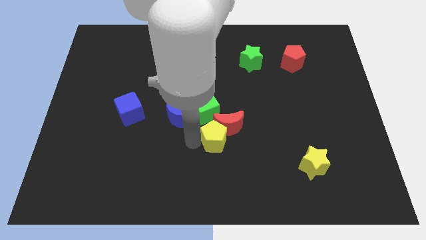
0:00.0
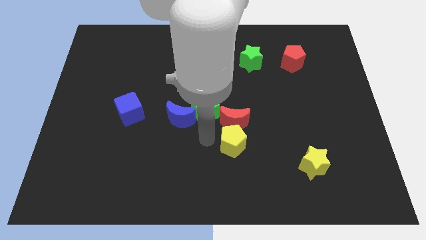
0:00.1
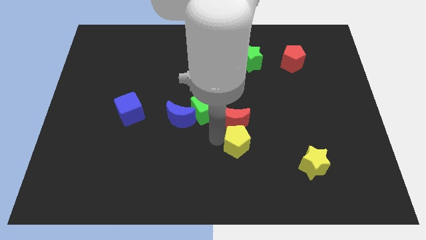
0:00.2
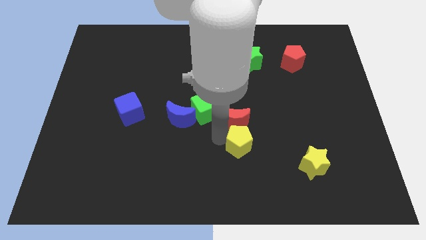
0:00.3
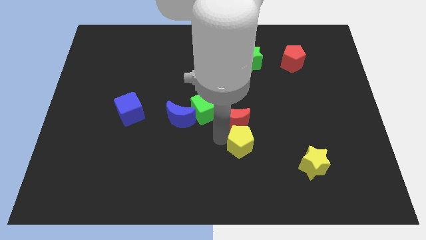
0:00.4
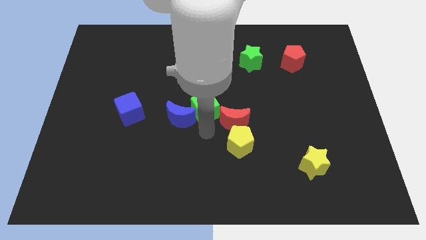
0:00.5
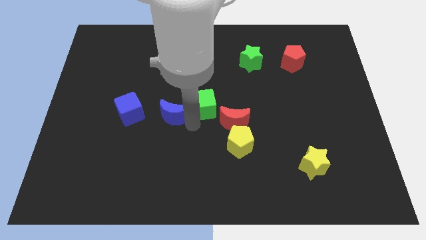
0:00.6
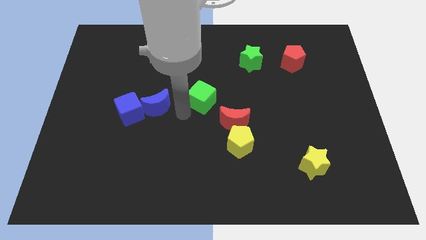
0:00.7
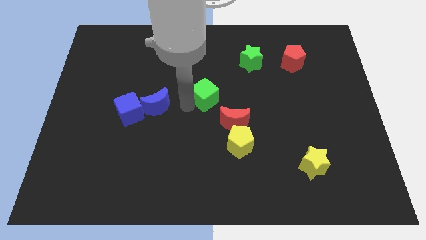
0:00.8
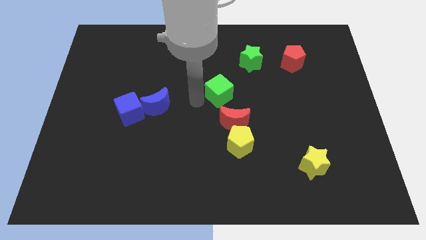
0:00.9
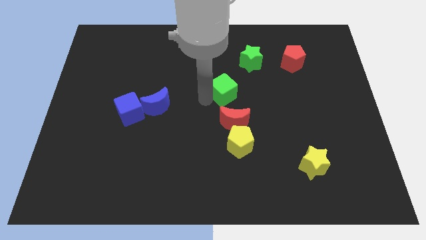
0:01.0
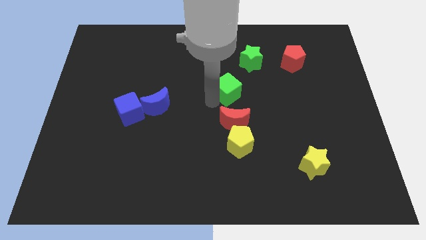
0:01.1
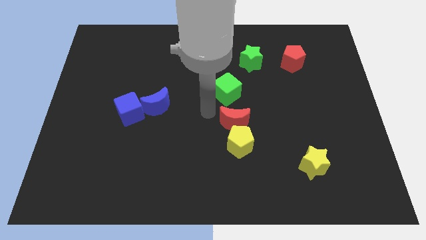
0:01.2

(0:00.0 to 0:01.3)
move the hand in between the blocks to spread them

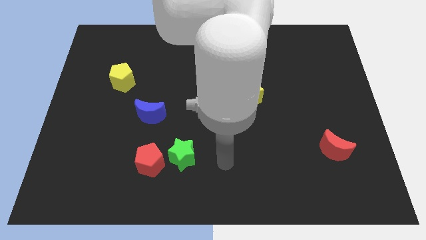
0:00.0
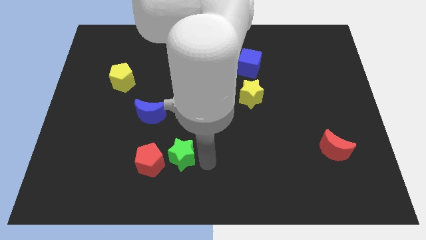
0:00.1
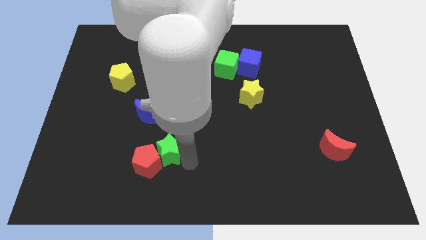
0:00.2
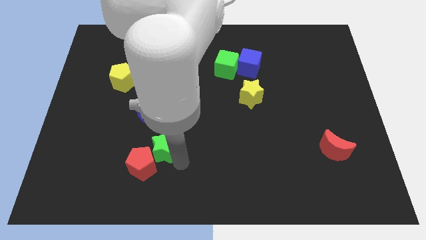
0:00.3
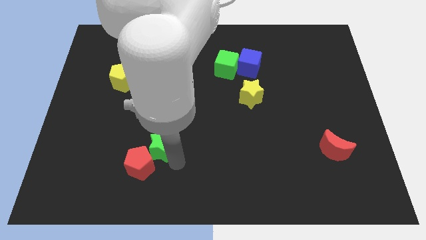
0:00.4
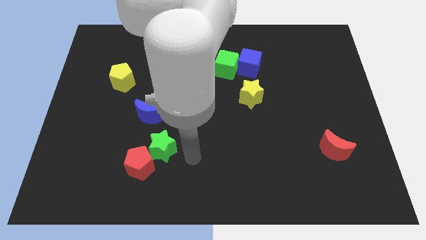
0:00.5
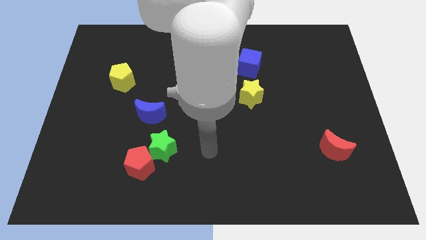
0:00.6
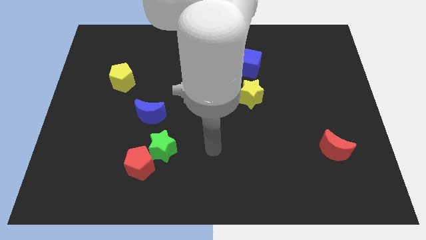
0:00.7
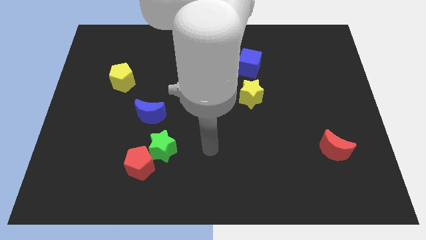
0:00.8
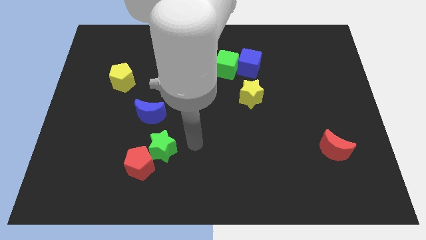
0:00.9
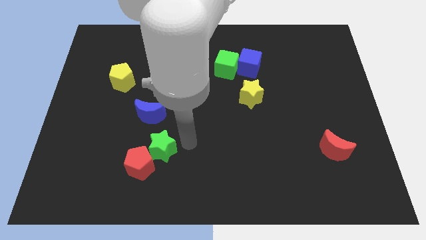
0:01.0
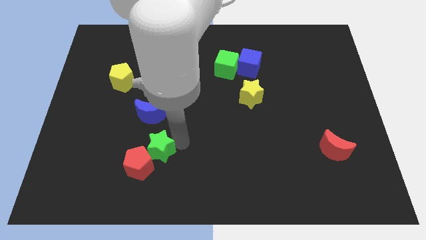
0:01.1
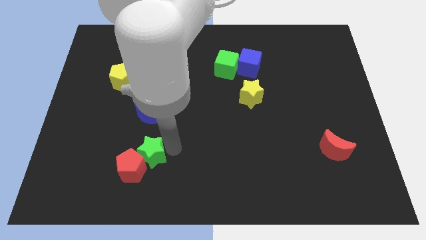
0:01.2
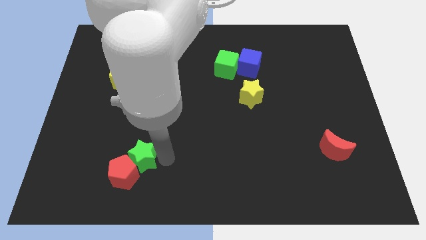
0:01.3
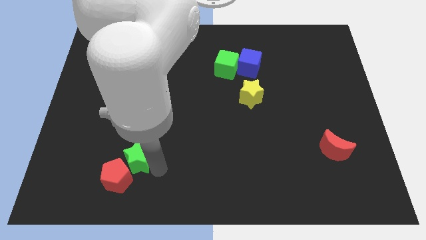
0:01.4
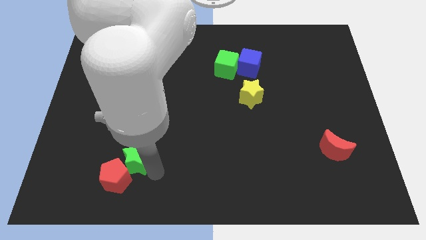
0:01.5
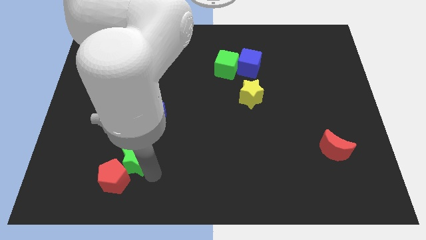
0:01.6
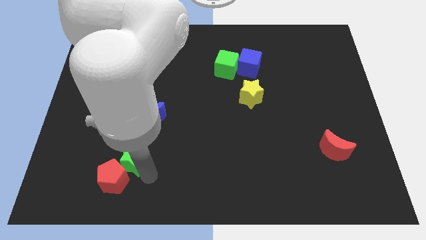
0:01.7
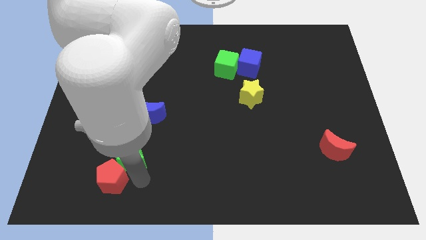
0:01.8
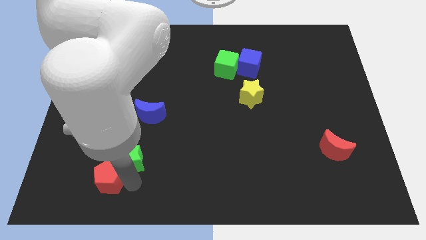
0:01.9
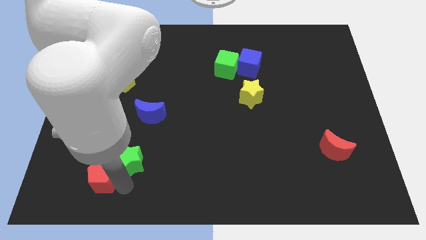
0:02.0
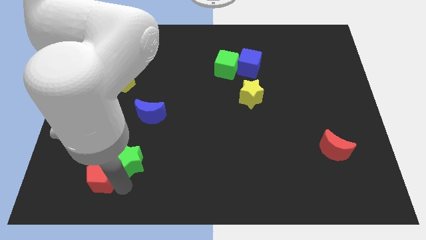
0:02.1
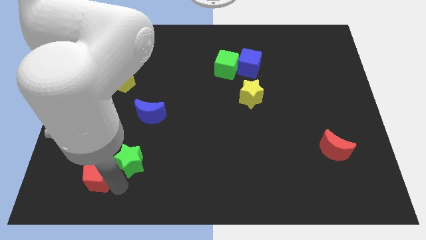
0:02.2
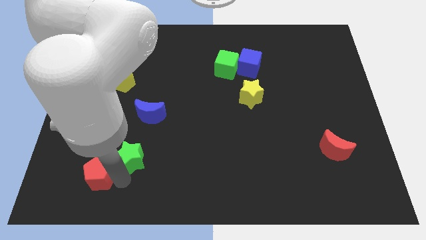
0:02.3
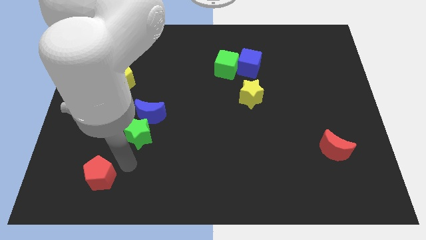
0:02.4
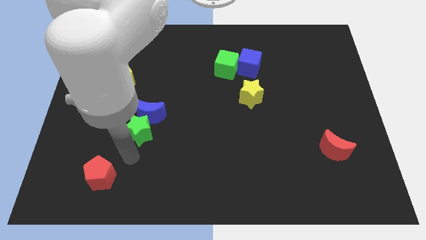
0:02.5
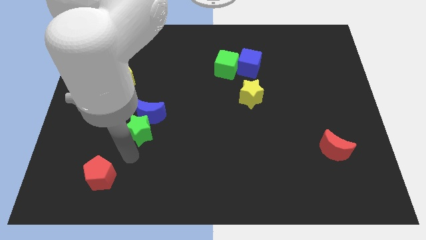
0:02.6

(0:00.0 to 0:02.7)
push the green star towards the bottom of the blue crescent

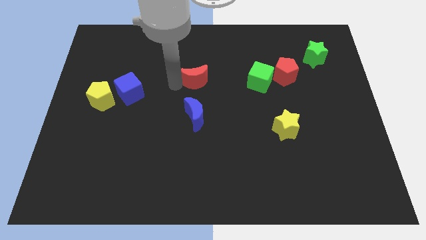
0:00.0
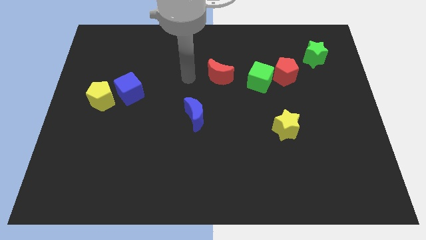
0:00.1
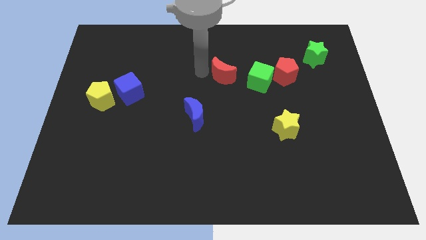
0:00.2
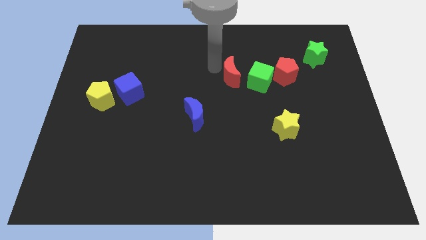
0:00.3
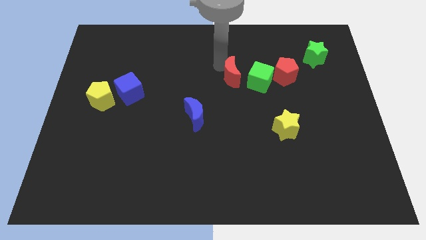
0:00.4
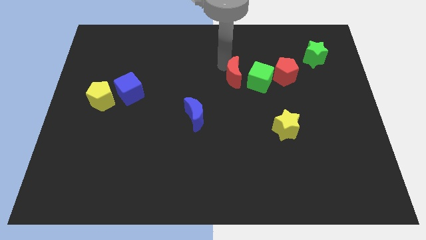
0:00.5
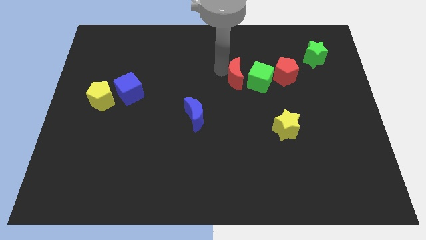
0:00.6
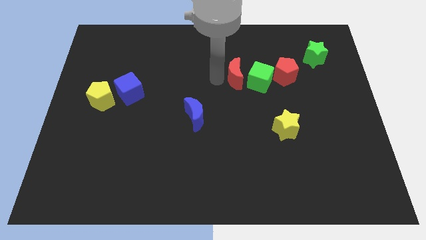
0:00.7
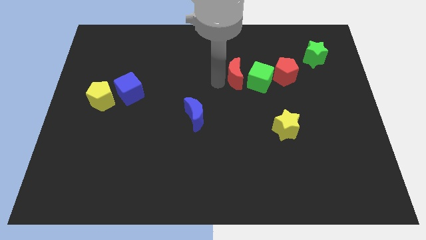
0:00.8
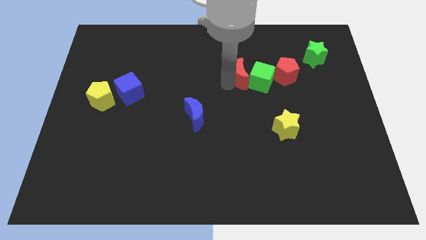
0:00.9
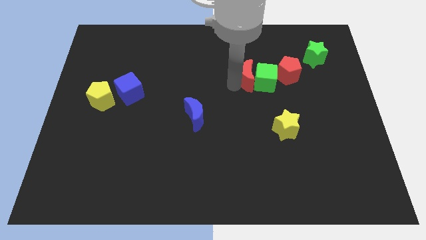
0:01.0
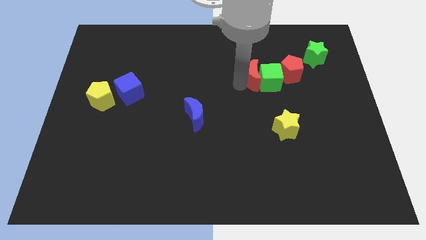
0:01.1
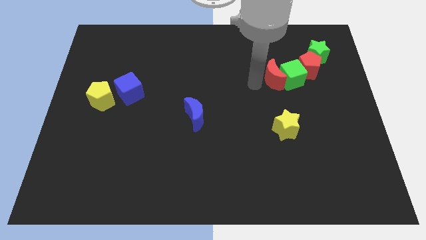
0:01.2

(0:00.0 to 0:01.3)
push the red crescent into the green cube

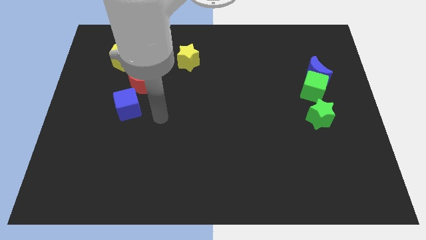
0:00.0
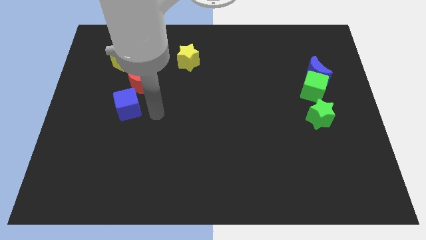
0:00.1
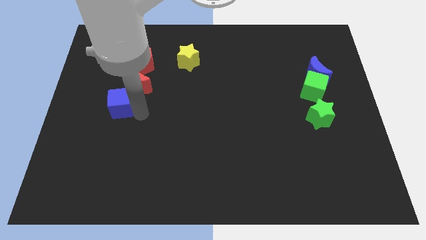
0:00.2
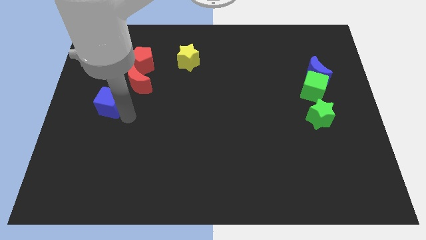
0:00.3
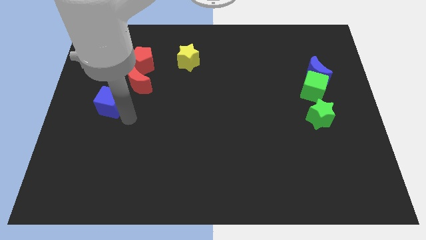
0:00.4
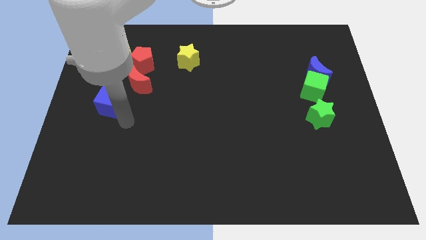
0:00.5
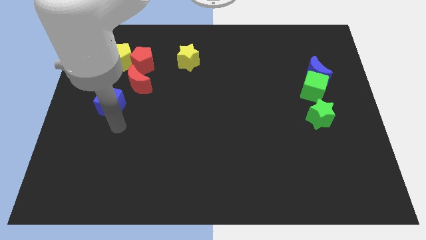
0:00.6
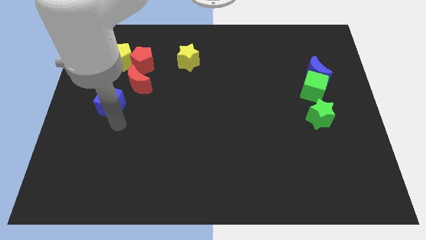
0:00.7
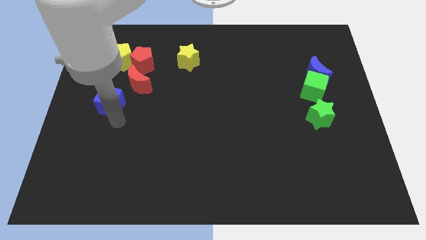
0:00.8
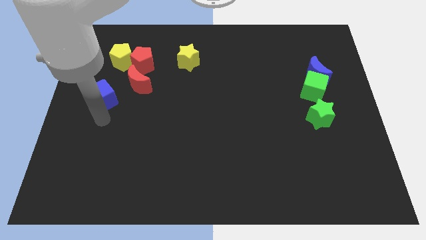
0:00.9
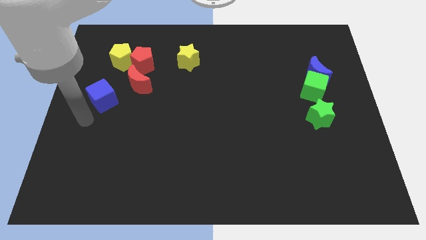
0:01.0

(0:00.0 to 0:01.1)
move blue cube slightly to the left

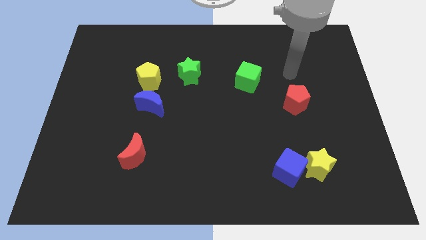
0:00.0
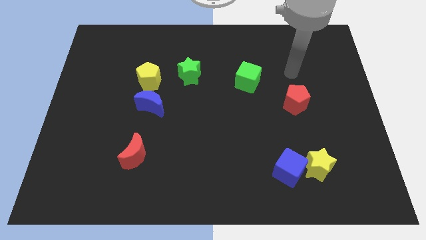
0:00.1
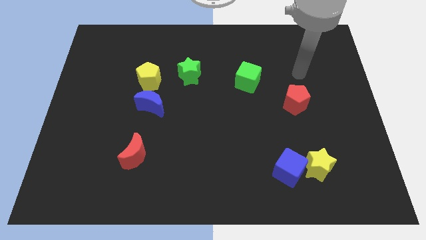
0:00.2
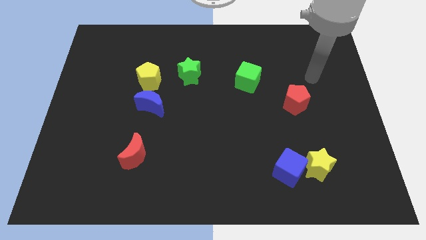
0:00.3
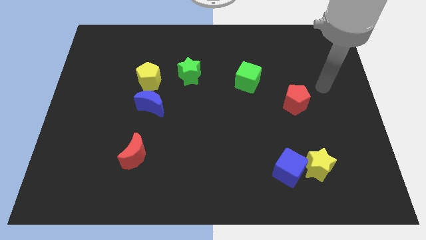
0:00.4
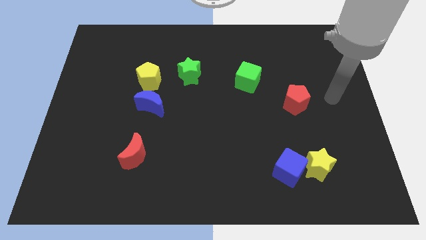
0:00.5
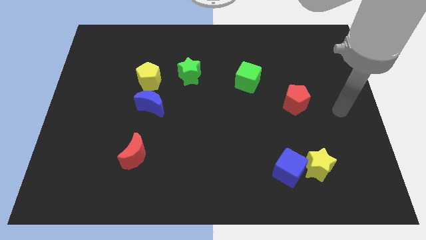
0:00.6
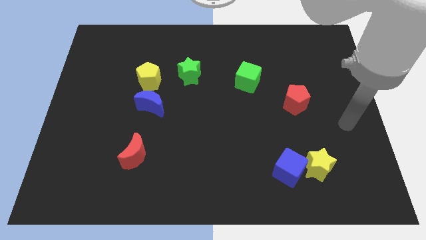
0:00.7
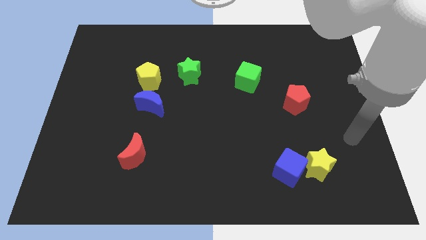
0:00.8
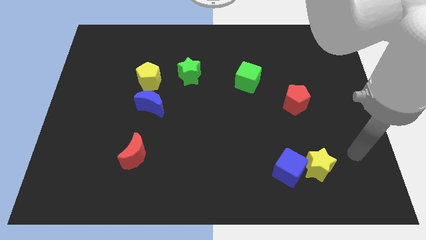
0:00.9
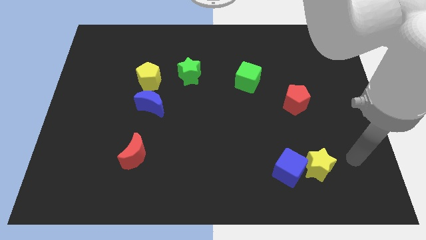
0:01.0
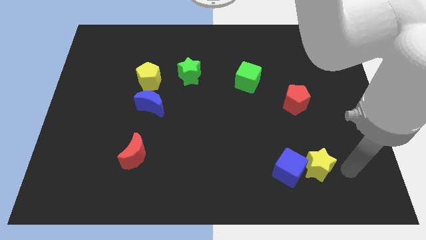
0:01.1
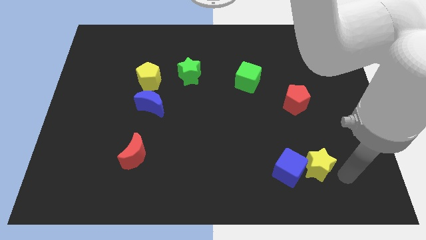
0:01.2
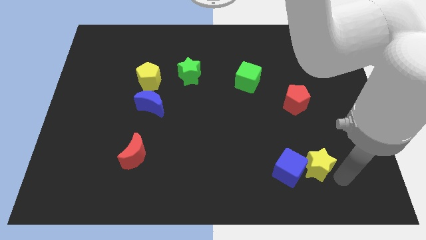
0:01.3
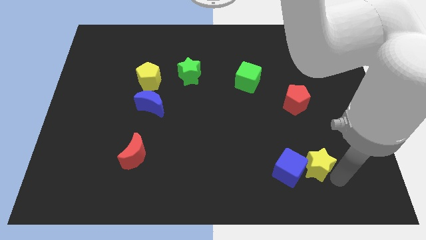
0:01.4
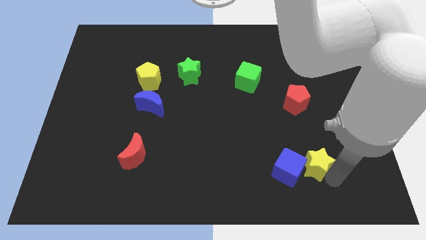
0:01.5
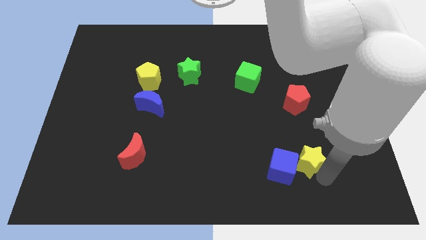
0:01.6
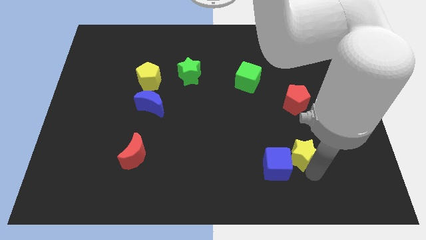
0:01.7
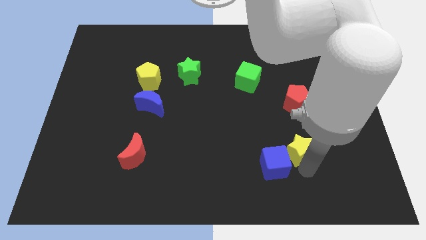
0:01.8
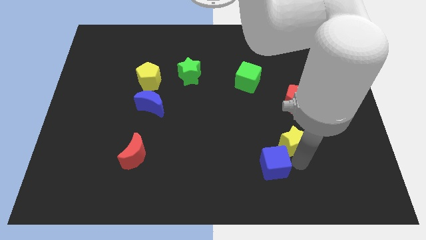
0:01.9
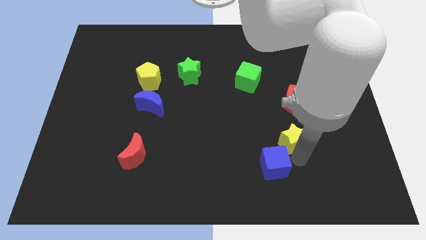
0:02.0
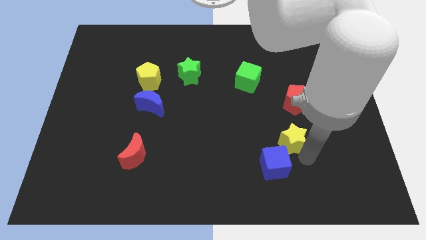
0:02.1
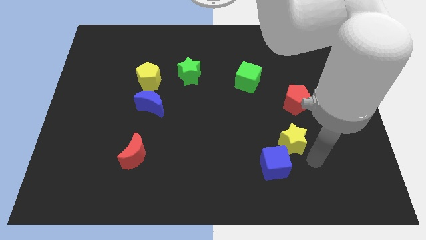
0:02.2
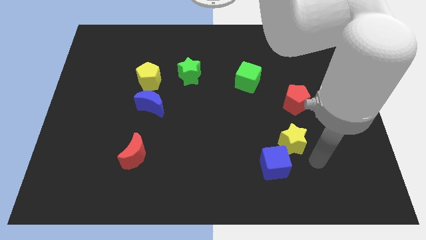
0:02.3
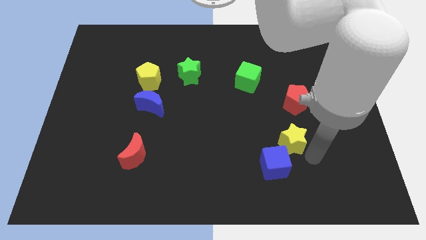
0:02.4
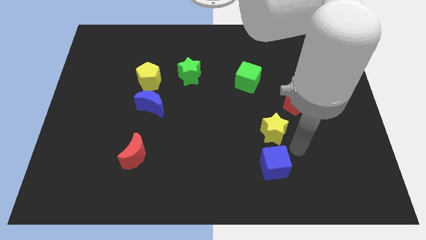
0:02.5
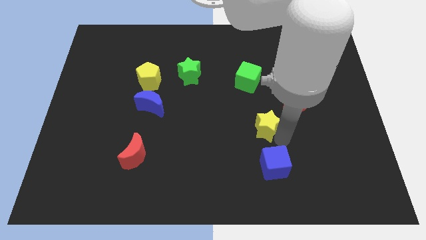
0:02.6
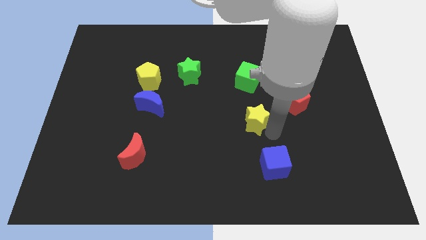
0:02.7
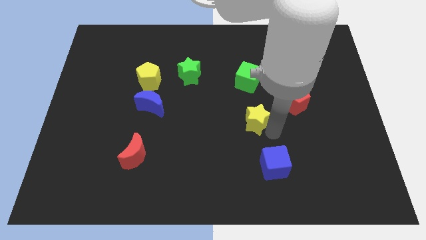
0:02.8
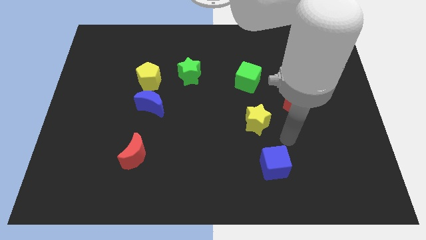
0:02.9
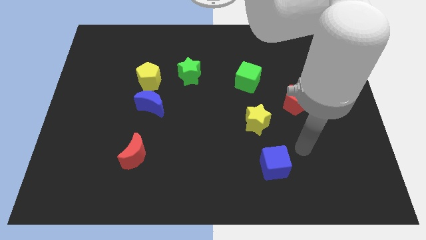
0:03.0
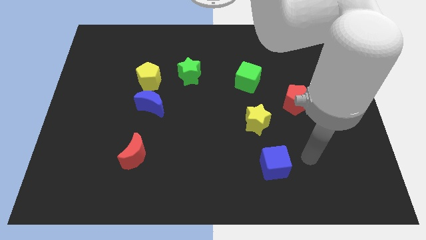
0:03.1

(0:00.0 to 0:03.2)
move the yellow star to the top of the blue cube
